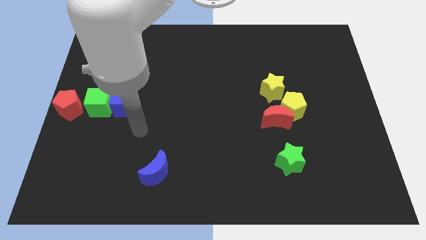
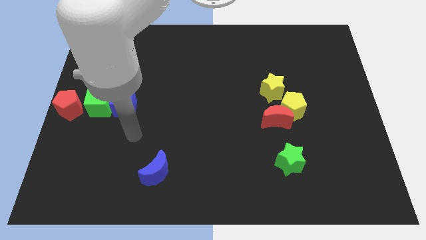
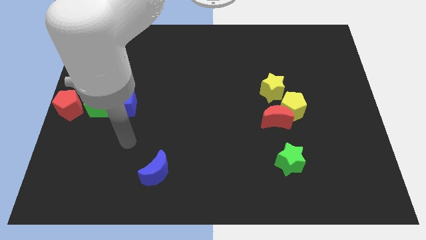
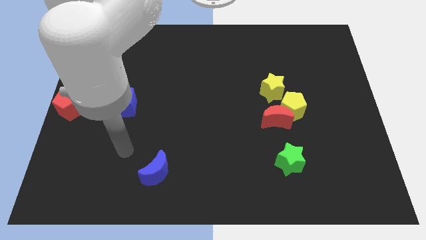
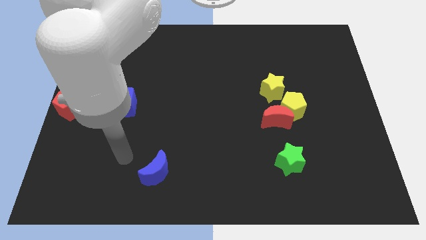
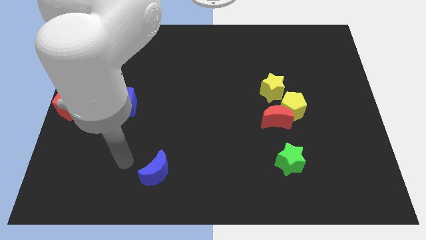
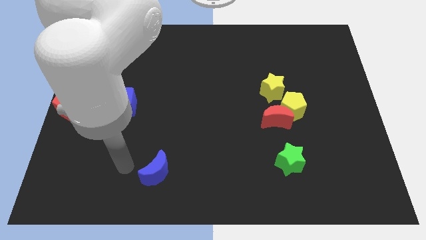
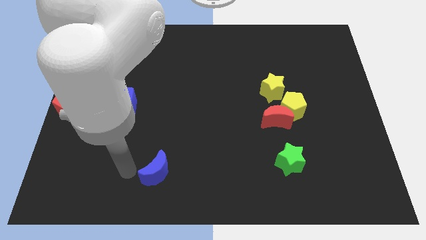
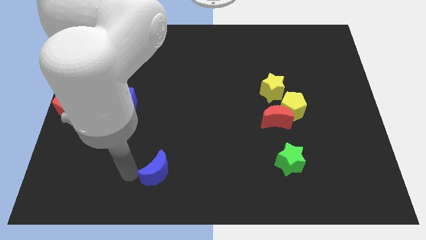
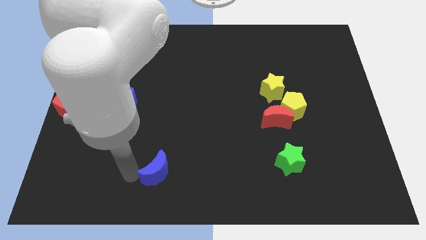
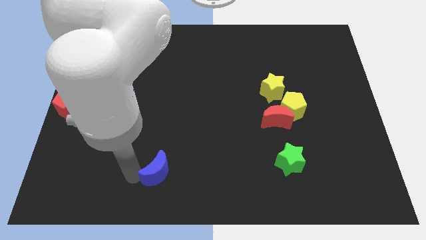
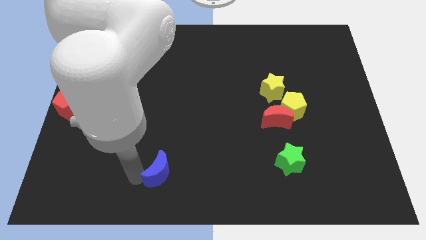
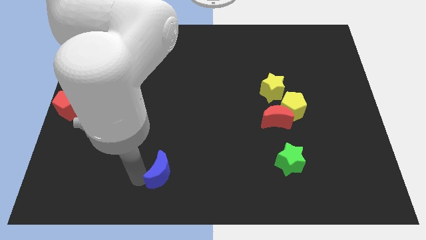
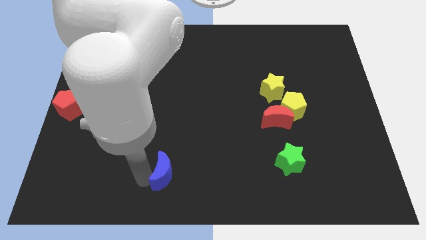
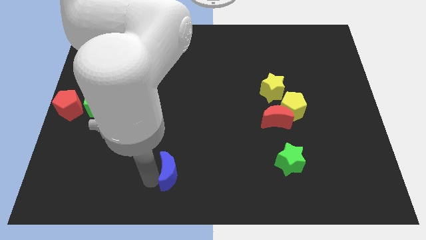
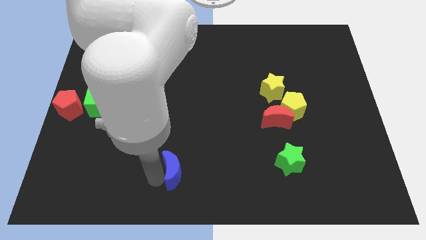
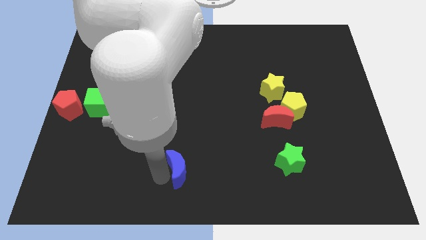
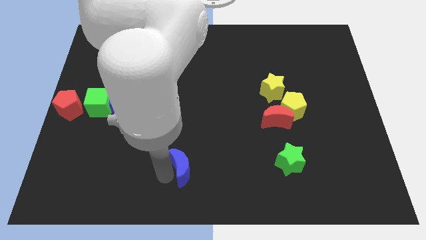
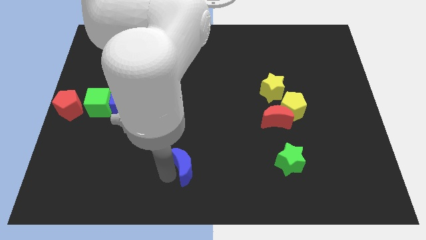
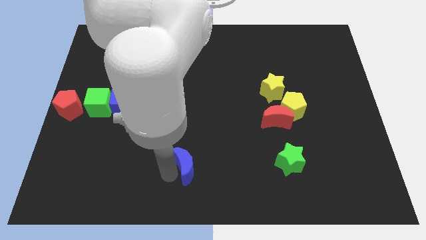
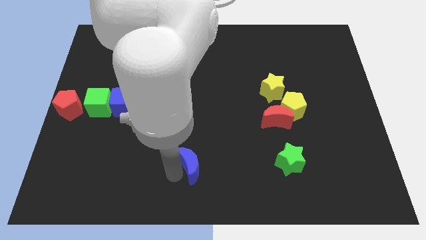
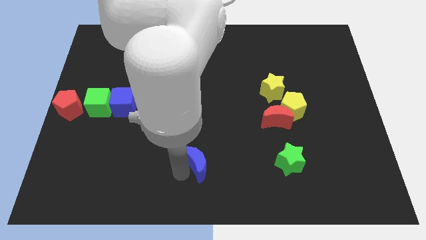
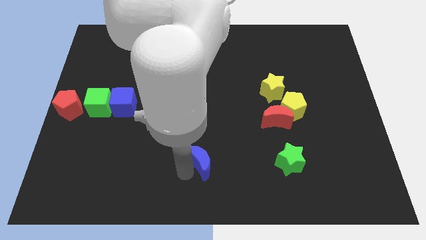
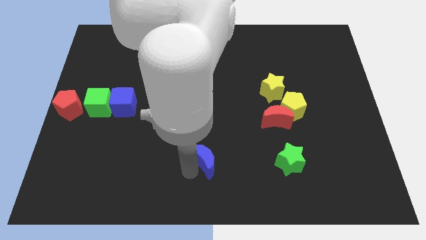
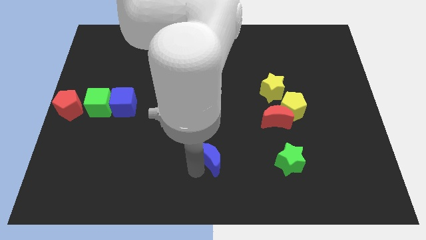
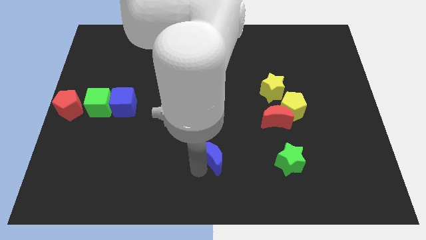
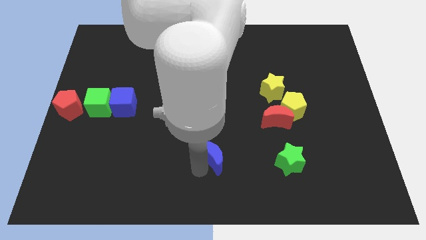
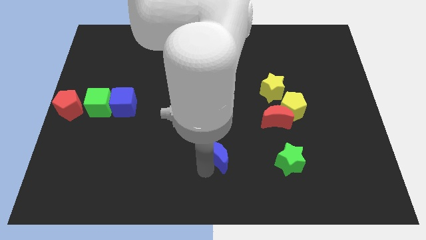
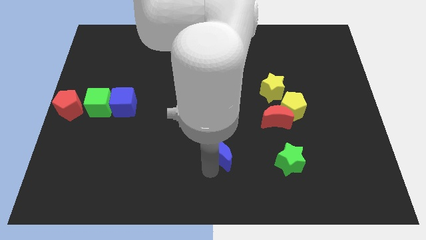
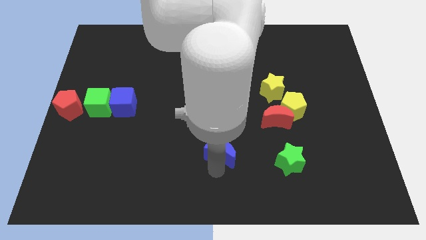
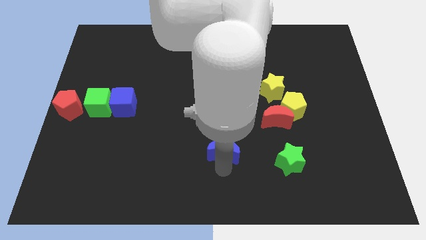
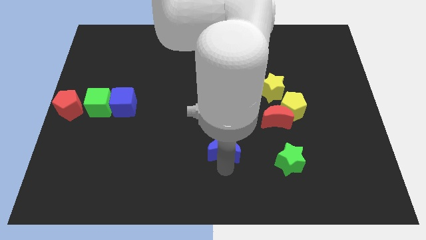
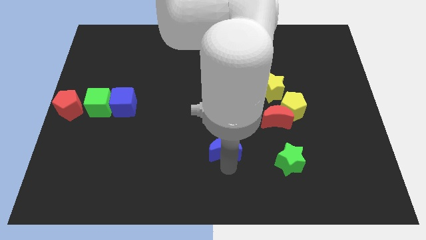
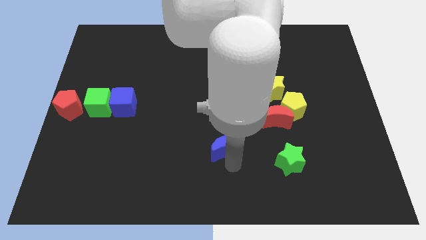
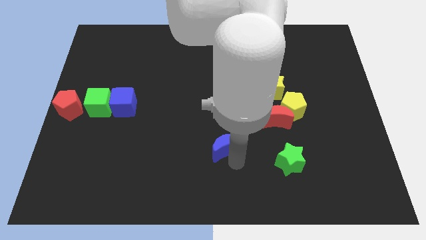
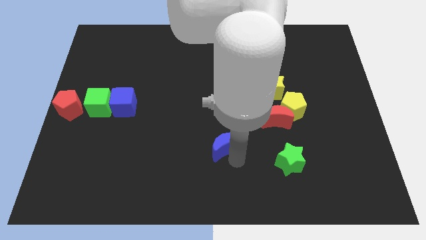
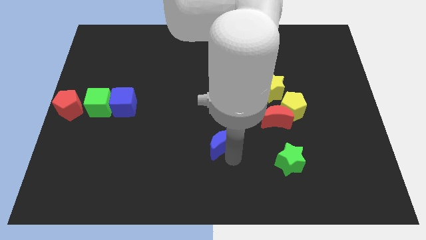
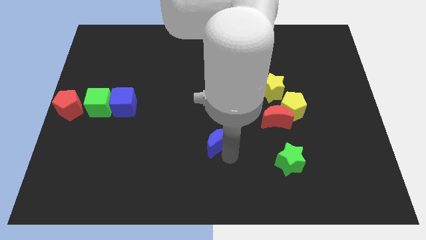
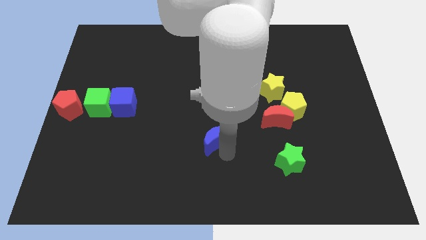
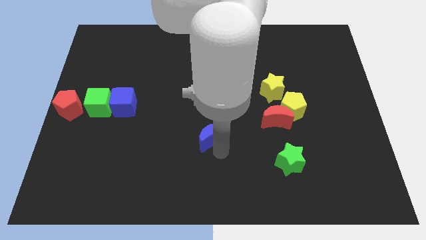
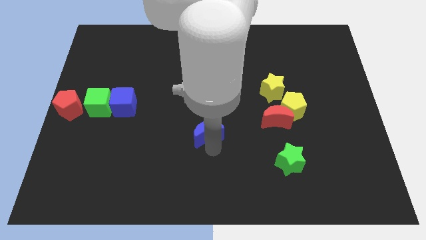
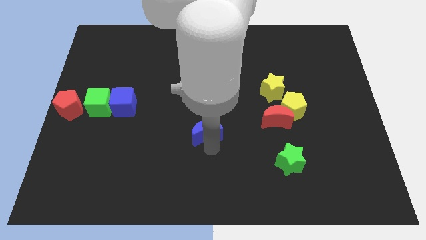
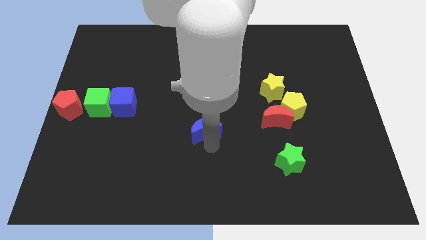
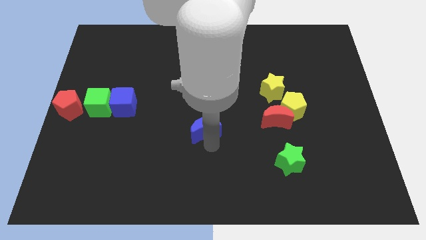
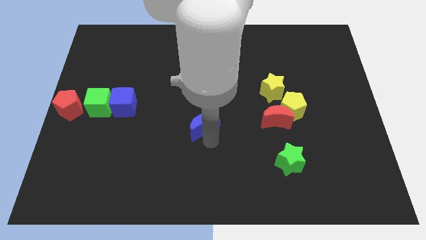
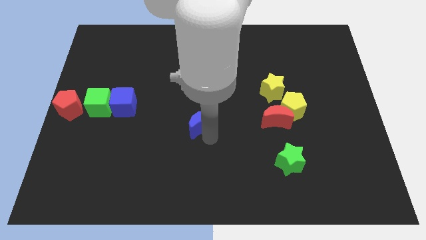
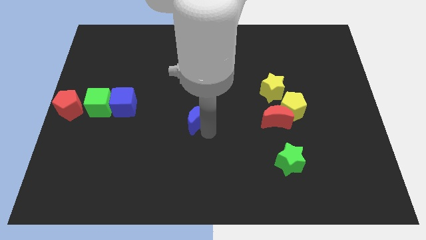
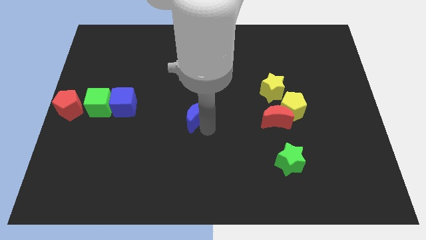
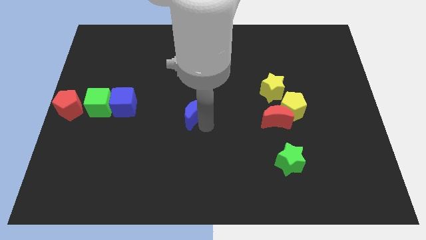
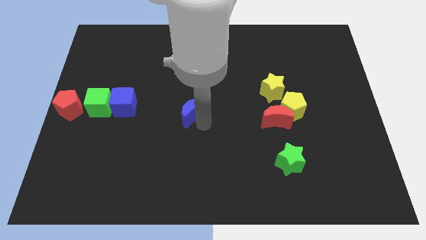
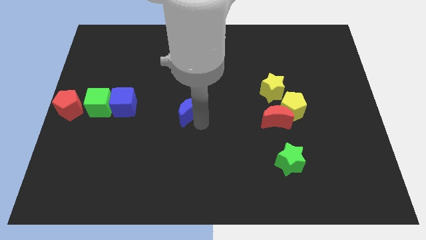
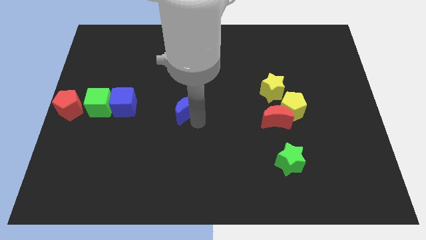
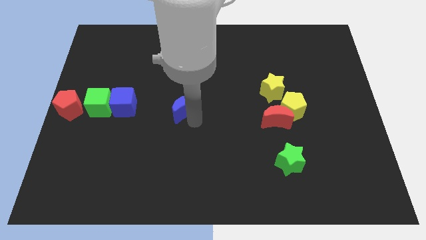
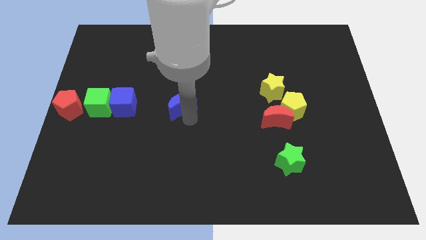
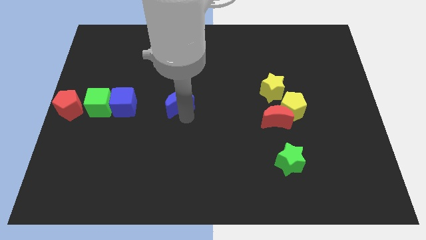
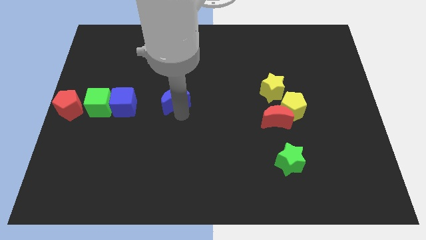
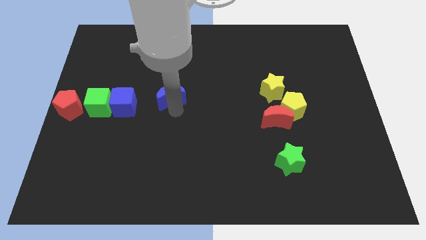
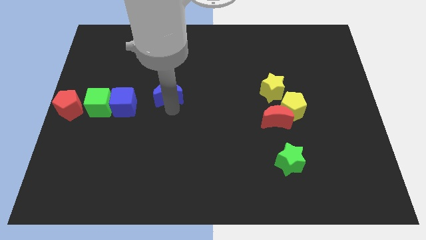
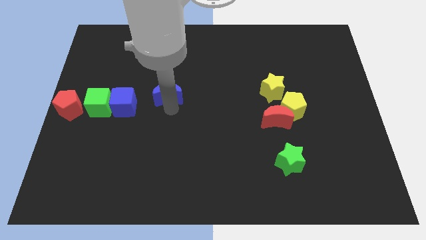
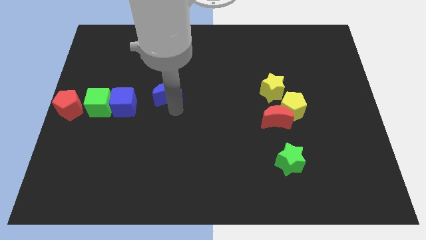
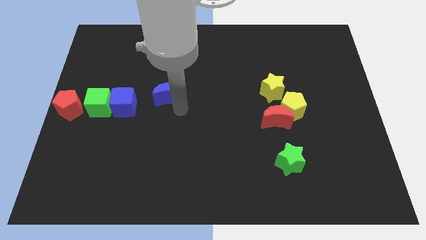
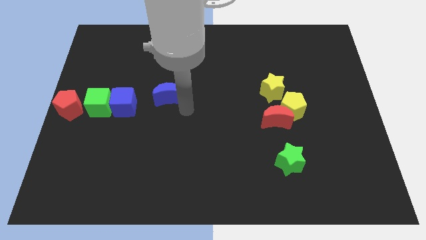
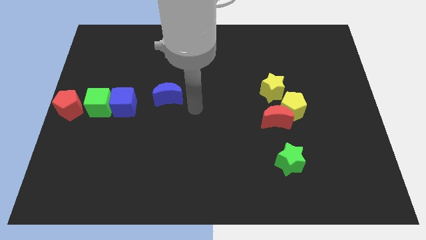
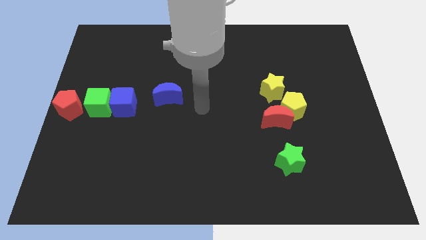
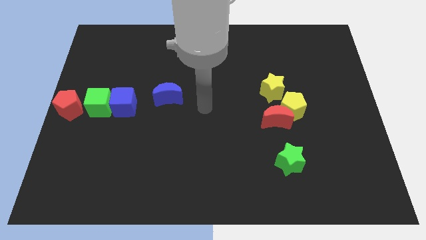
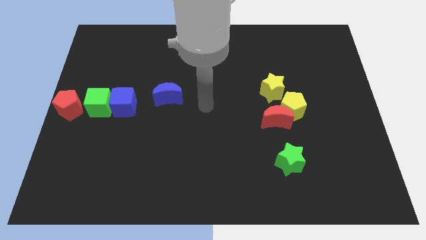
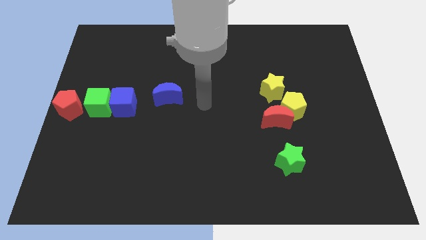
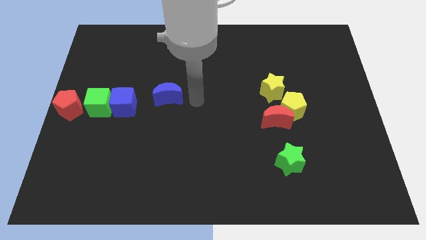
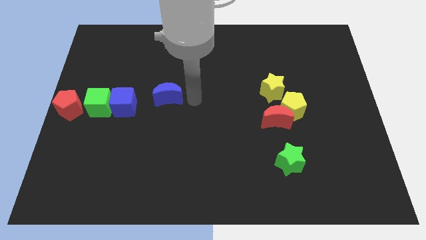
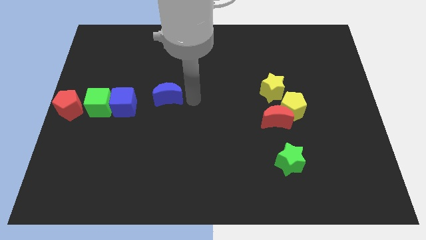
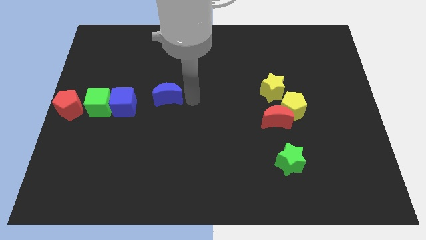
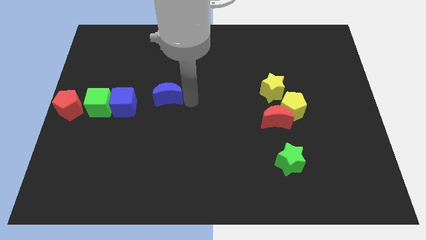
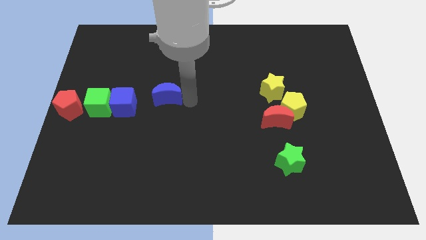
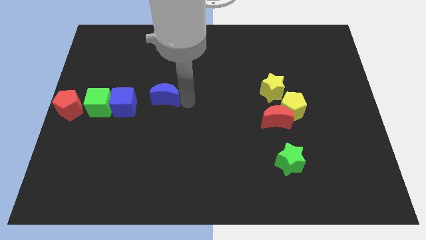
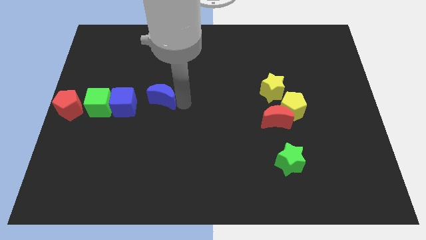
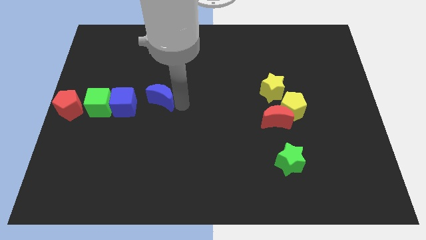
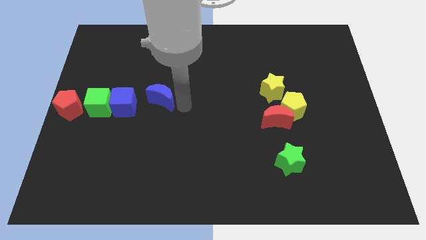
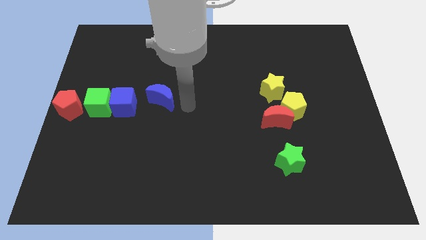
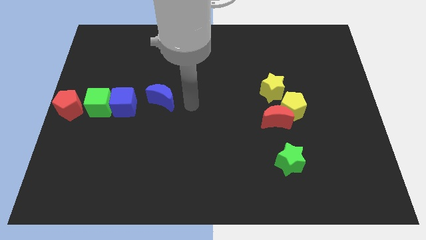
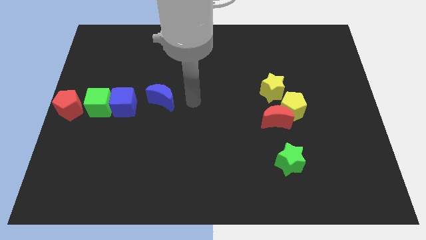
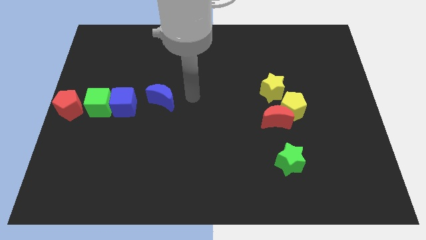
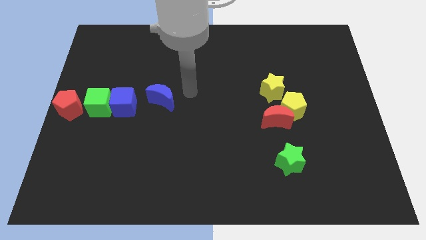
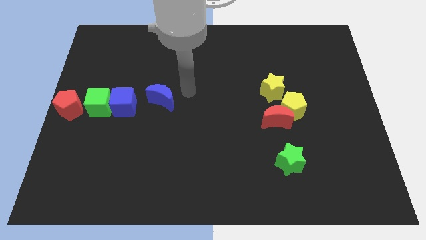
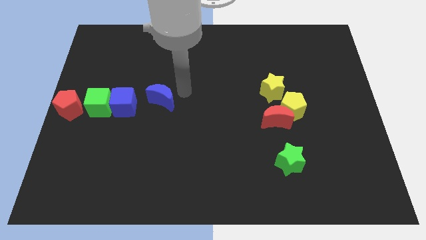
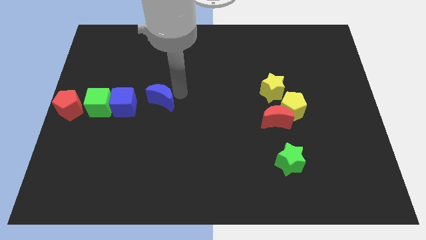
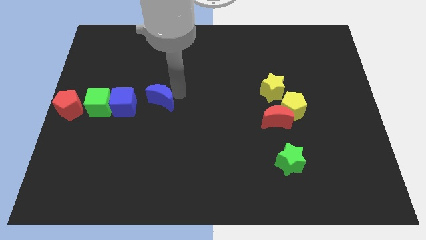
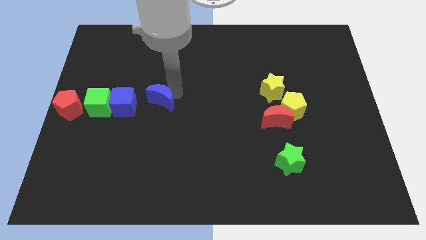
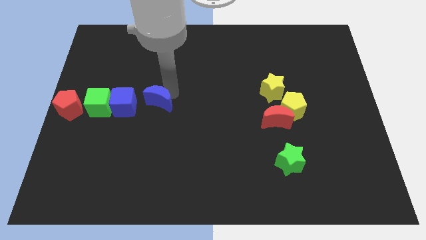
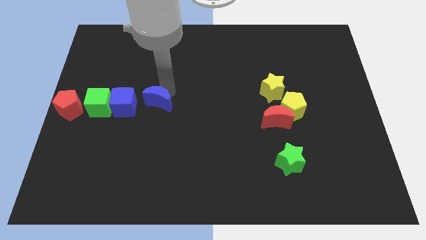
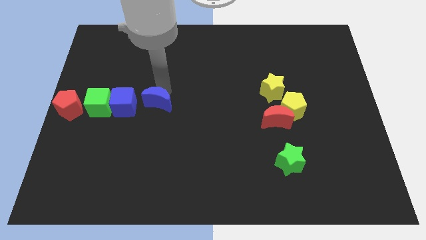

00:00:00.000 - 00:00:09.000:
move the blue crescent to the right of the blue cube

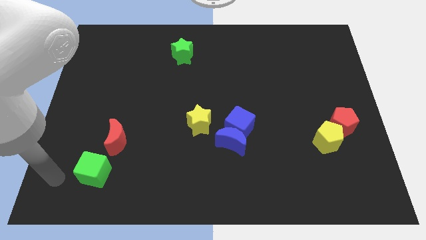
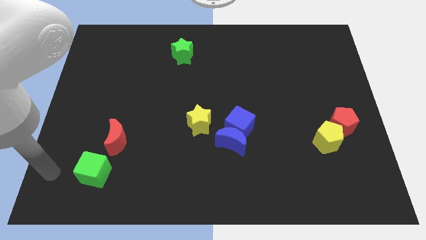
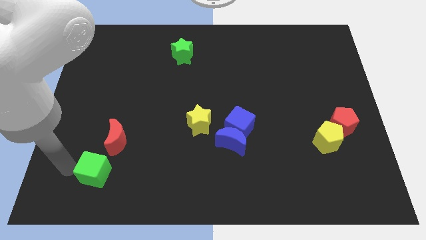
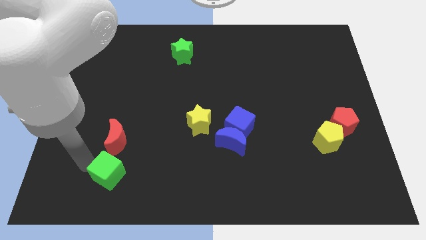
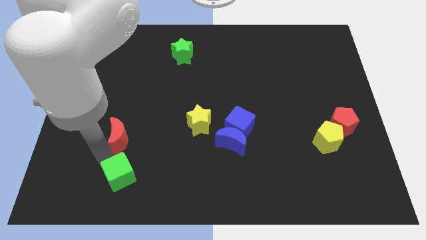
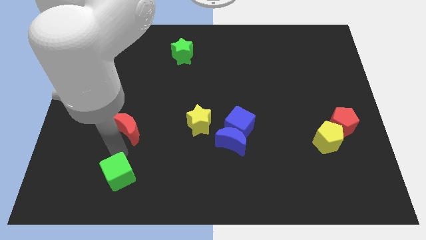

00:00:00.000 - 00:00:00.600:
push the green cube slightly to the right
